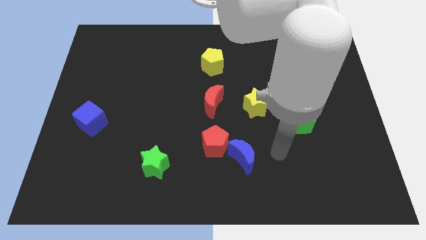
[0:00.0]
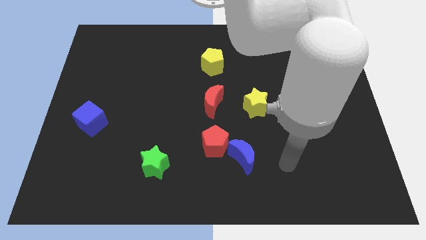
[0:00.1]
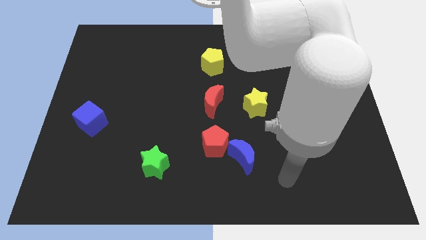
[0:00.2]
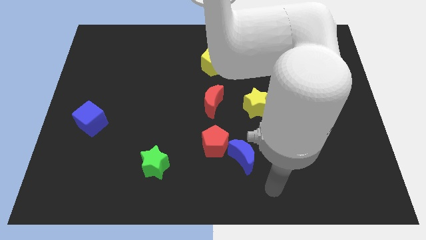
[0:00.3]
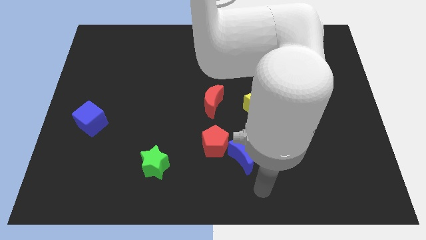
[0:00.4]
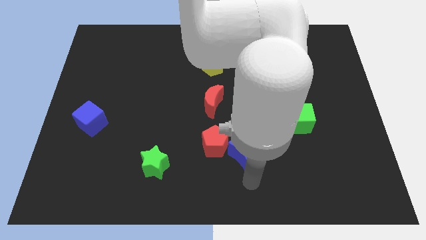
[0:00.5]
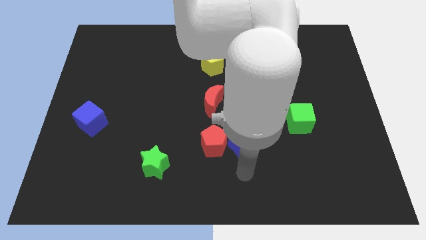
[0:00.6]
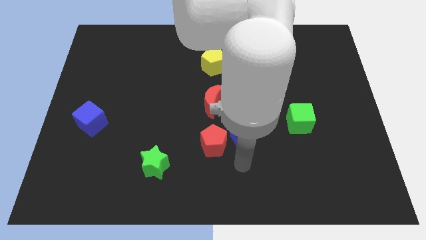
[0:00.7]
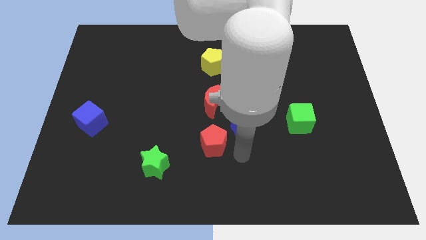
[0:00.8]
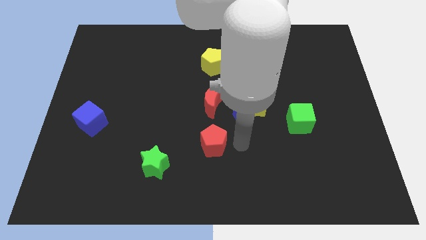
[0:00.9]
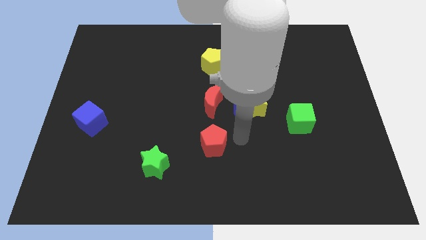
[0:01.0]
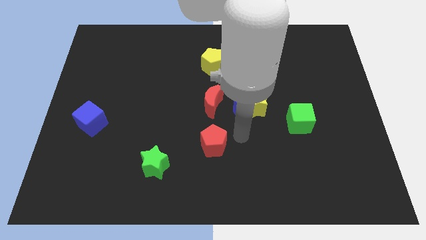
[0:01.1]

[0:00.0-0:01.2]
separate the red pentagon and blue moon

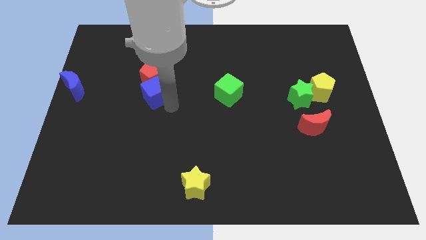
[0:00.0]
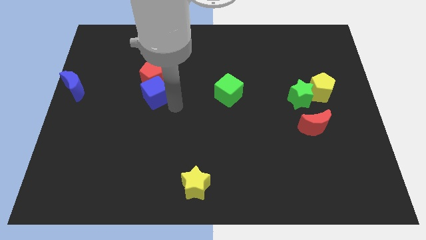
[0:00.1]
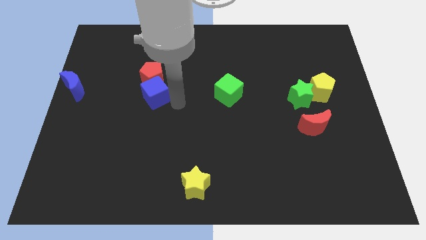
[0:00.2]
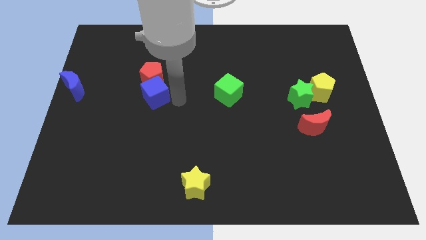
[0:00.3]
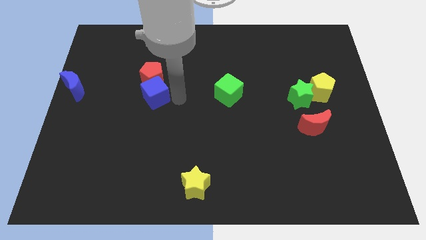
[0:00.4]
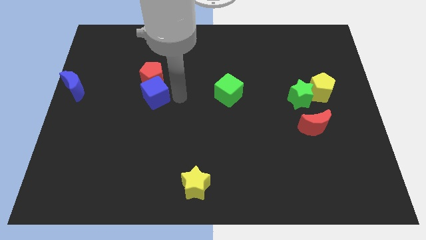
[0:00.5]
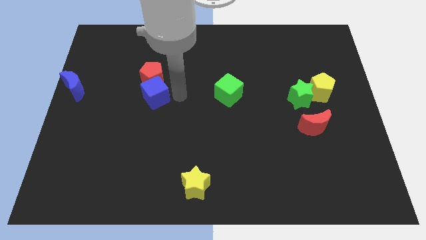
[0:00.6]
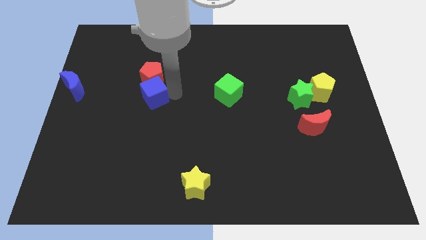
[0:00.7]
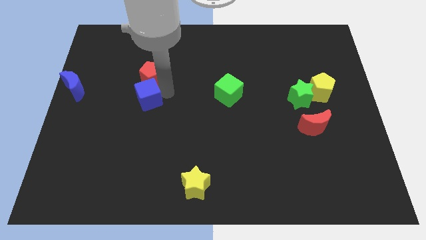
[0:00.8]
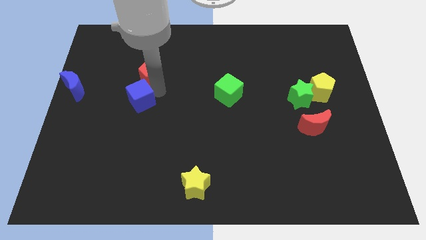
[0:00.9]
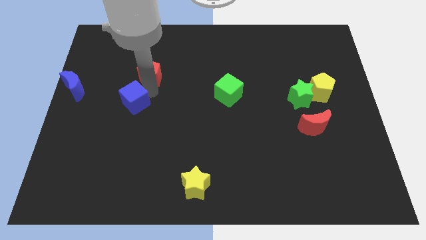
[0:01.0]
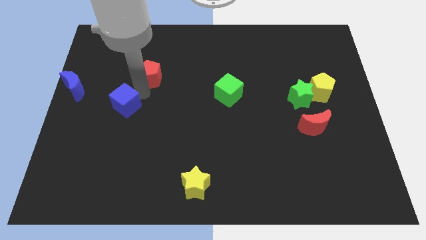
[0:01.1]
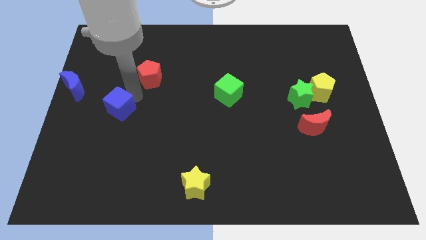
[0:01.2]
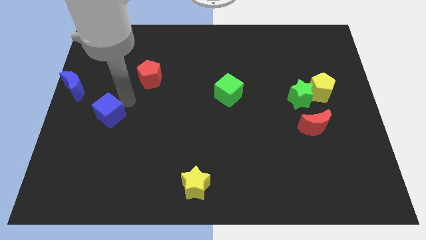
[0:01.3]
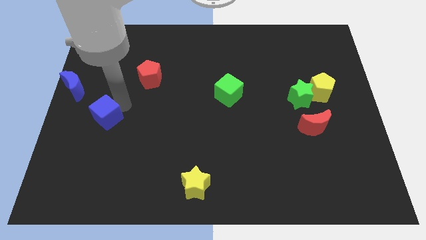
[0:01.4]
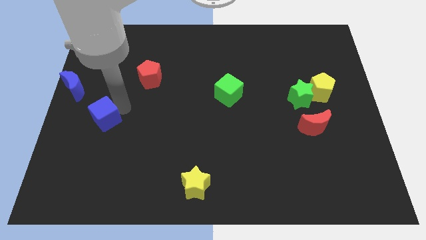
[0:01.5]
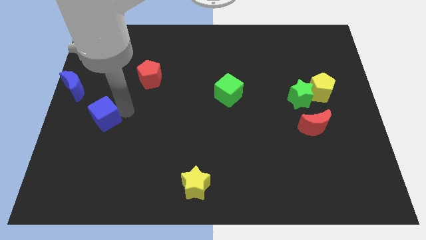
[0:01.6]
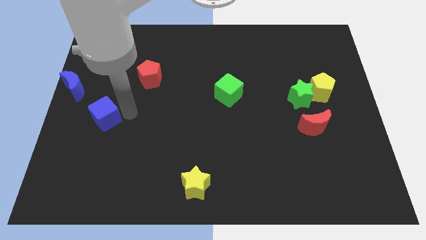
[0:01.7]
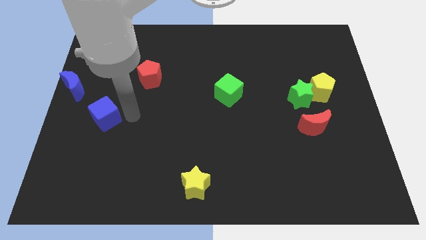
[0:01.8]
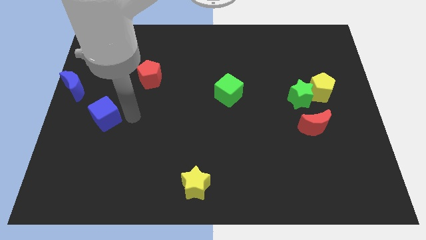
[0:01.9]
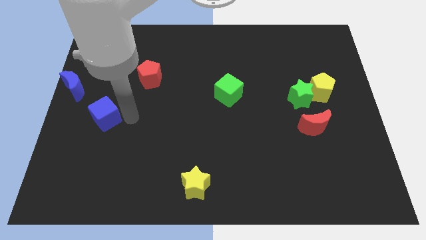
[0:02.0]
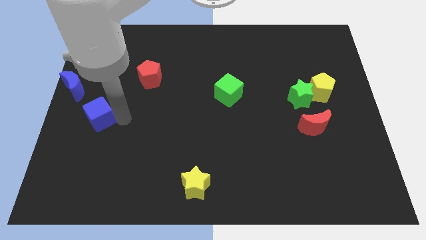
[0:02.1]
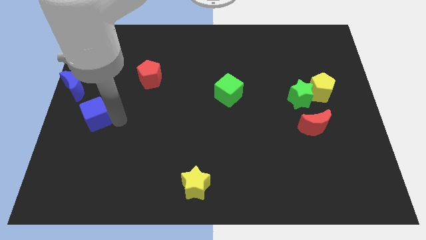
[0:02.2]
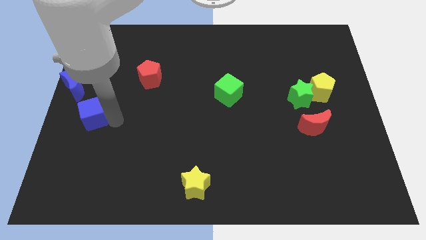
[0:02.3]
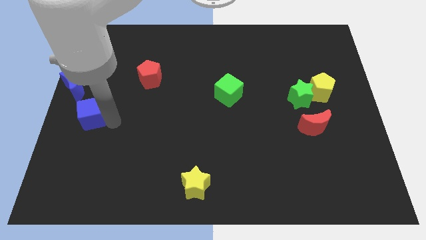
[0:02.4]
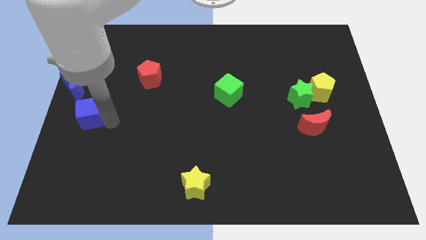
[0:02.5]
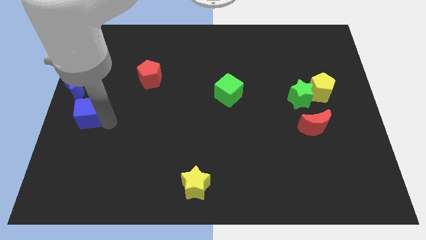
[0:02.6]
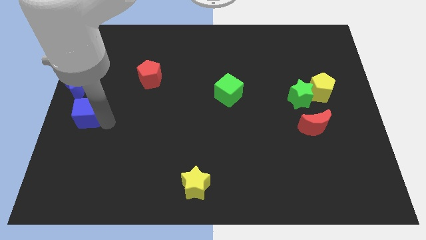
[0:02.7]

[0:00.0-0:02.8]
separate the blue cube from the red pentagon

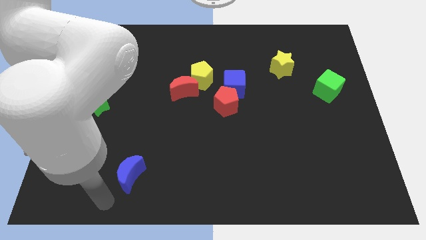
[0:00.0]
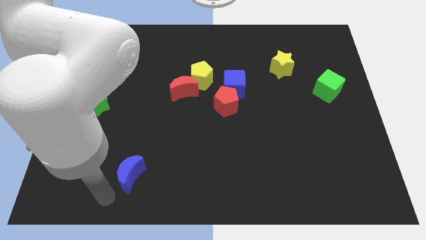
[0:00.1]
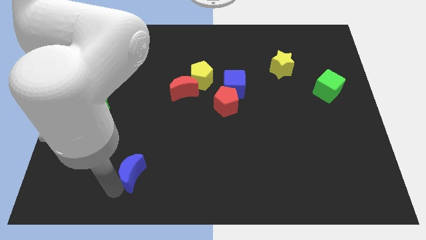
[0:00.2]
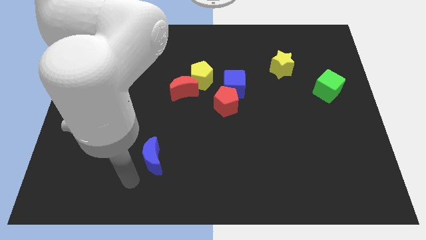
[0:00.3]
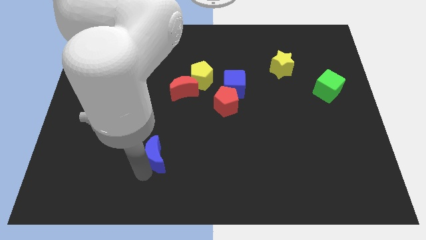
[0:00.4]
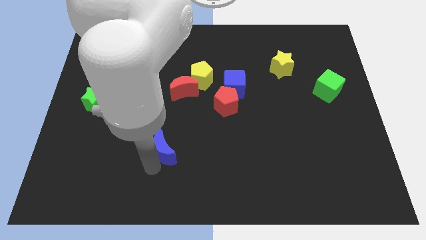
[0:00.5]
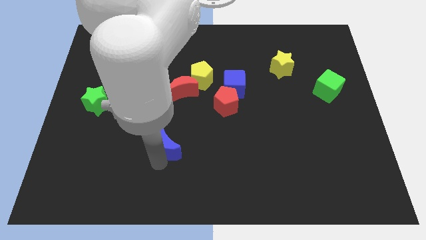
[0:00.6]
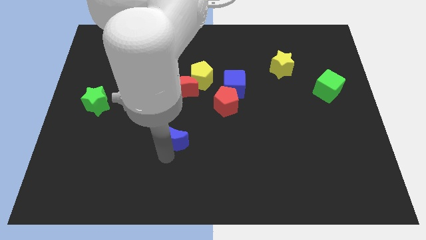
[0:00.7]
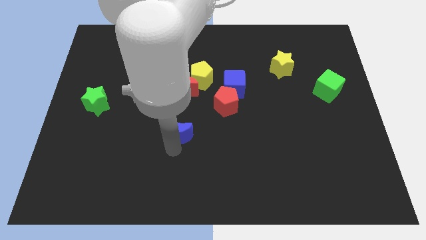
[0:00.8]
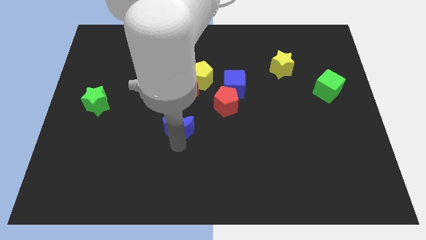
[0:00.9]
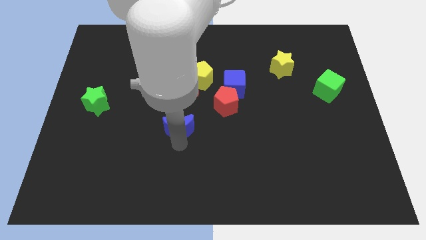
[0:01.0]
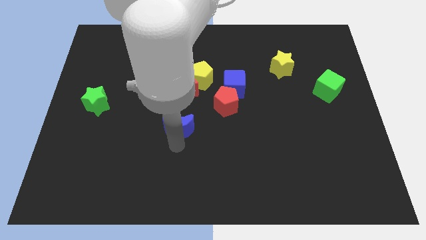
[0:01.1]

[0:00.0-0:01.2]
push the blue crescent to the bottom of the red crescent

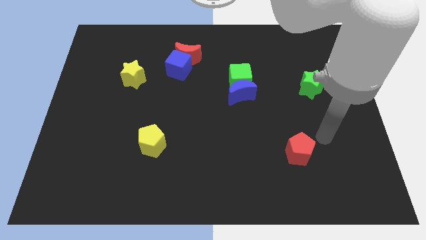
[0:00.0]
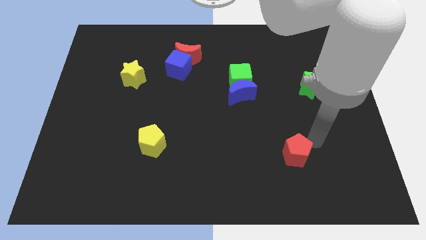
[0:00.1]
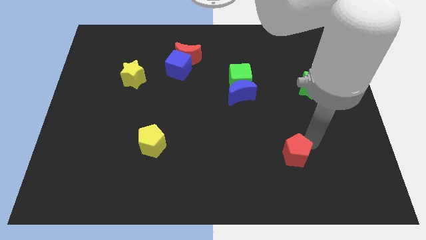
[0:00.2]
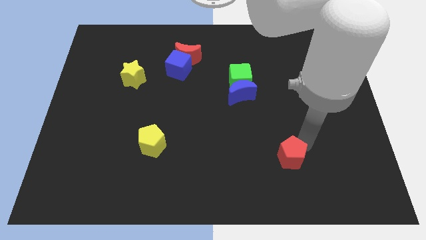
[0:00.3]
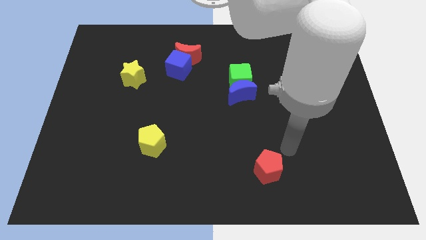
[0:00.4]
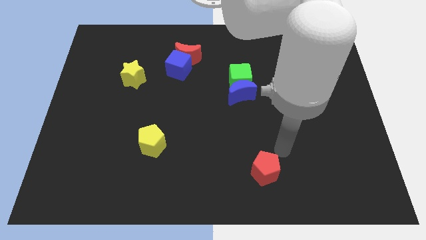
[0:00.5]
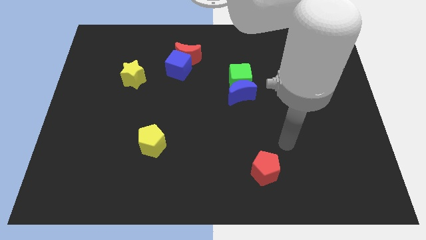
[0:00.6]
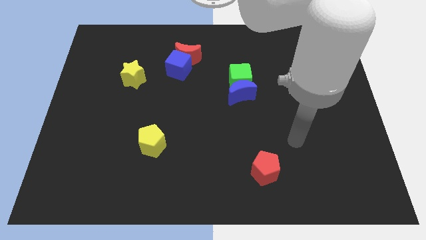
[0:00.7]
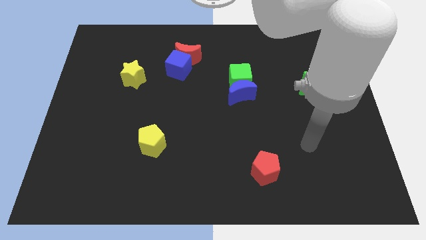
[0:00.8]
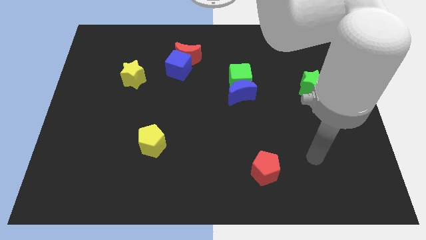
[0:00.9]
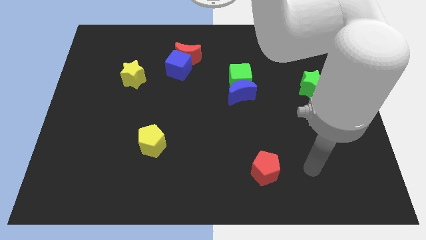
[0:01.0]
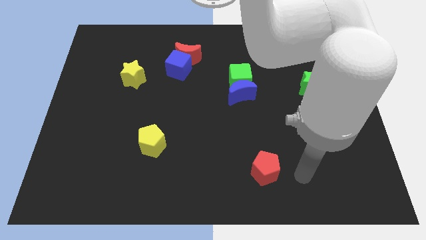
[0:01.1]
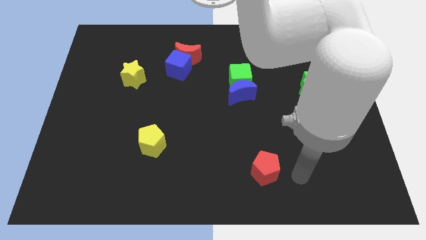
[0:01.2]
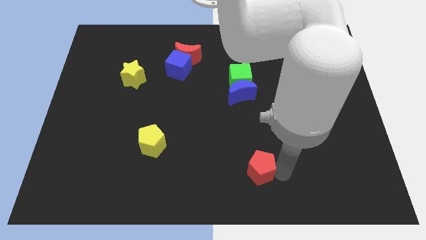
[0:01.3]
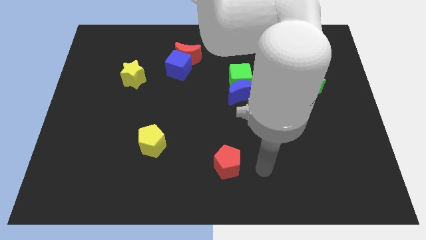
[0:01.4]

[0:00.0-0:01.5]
move the red pentagon below the blue moon

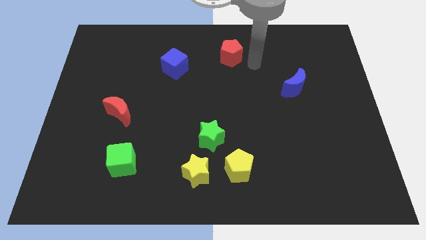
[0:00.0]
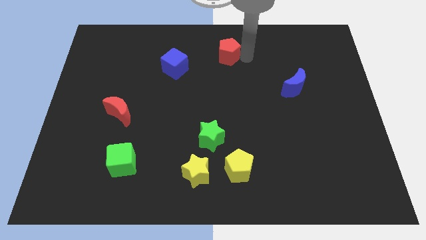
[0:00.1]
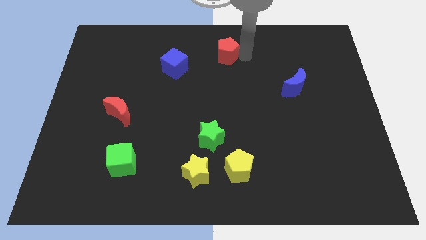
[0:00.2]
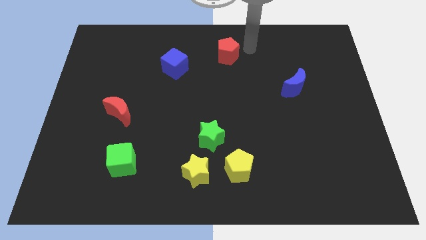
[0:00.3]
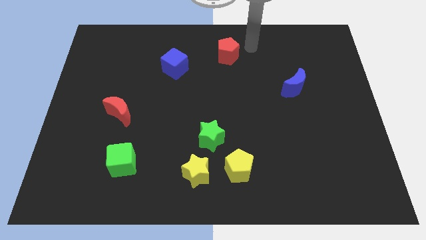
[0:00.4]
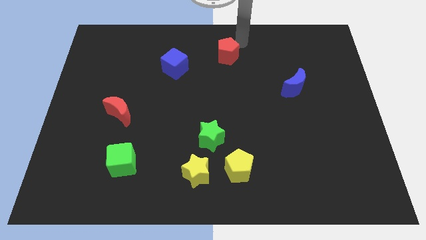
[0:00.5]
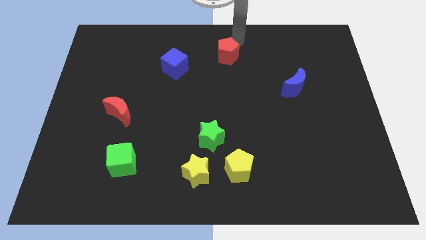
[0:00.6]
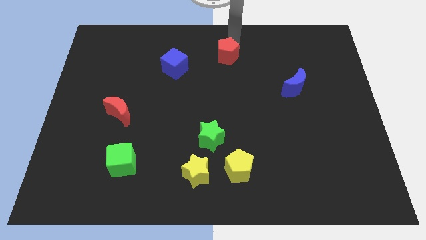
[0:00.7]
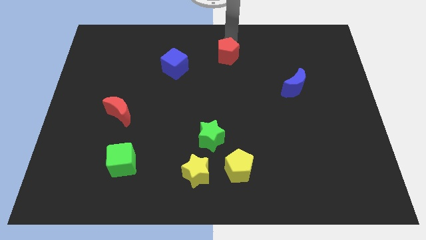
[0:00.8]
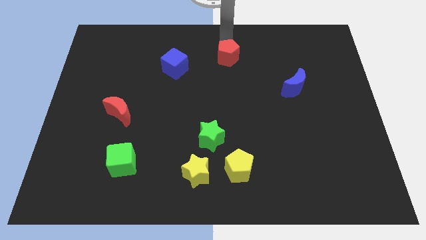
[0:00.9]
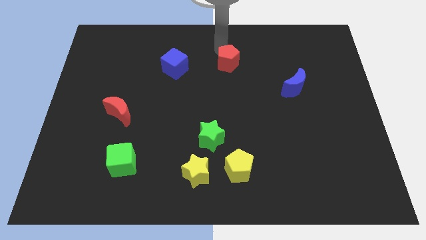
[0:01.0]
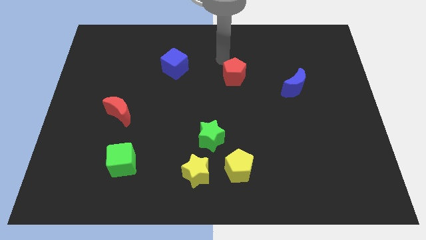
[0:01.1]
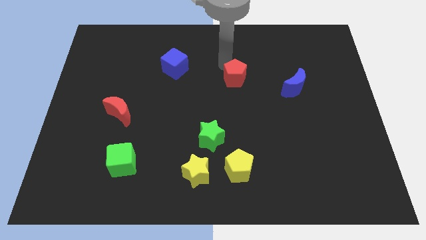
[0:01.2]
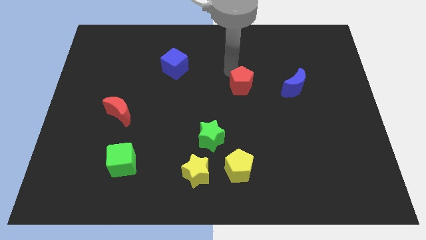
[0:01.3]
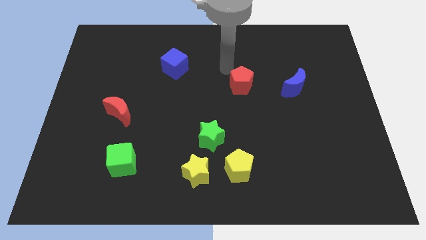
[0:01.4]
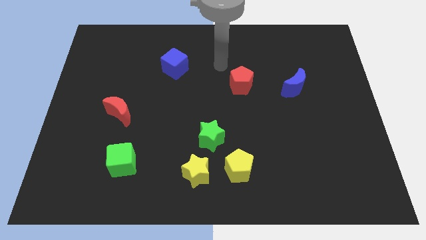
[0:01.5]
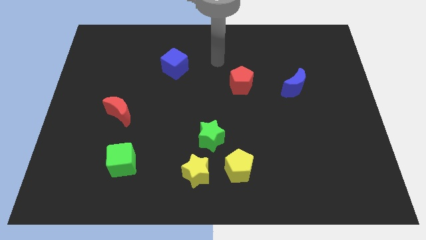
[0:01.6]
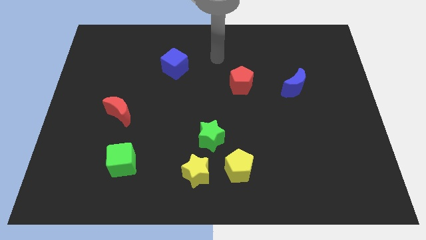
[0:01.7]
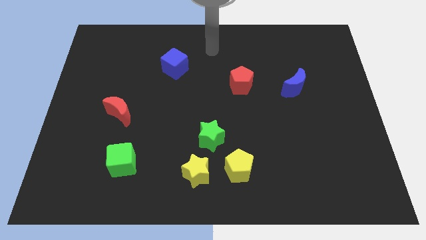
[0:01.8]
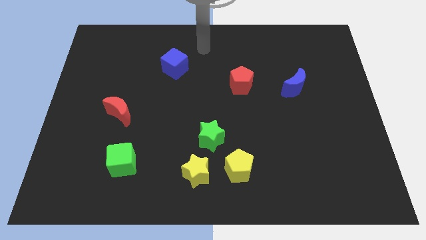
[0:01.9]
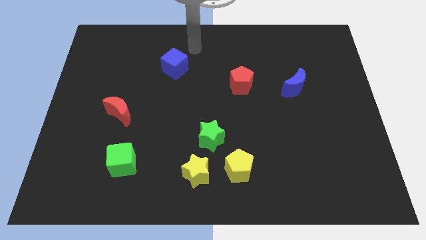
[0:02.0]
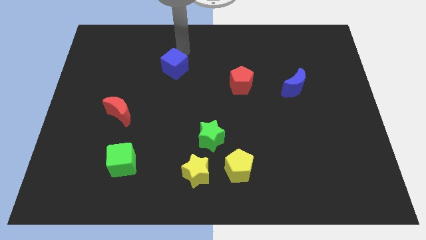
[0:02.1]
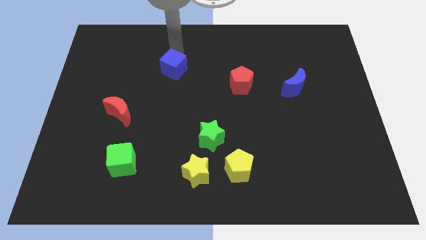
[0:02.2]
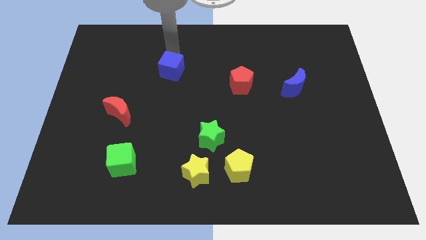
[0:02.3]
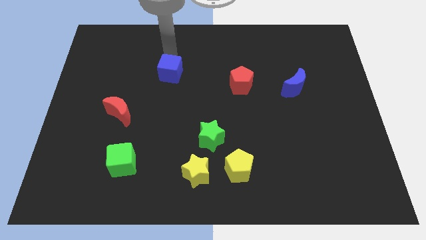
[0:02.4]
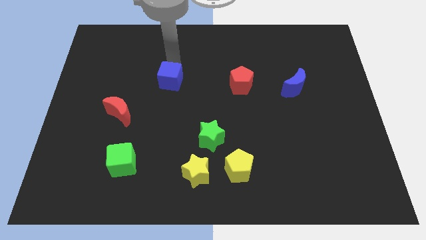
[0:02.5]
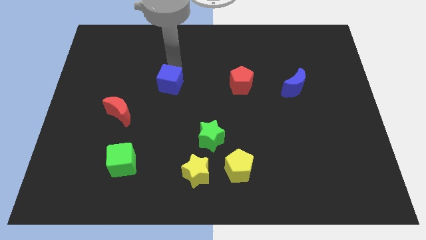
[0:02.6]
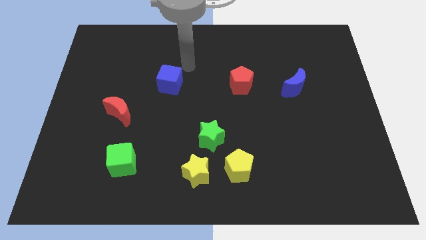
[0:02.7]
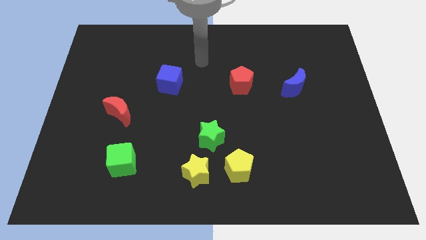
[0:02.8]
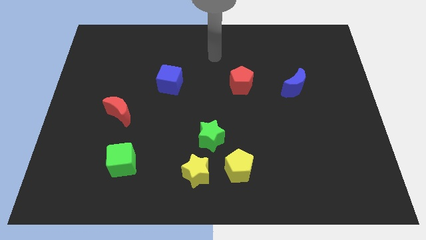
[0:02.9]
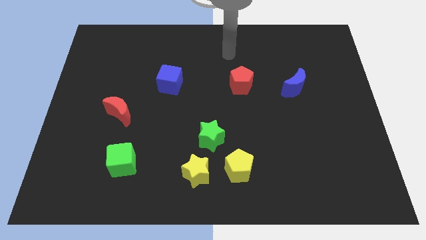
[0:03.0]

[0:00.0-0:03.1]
make a horizontal line with the red pentagon blue cube and blue crescent
